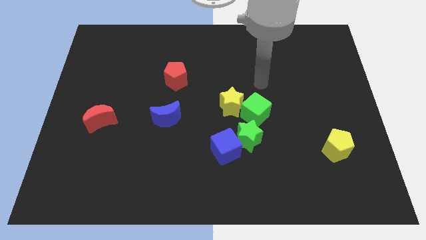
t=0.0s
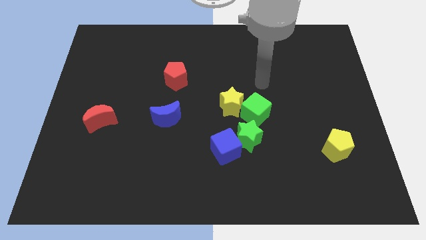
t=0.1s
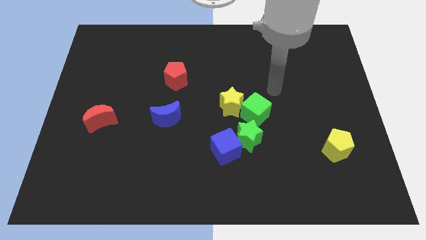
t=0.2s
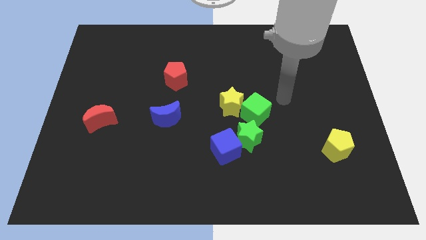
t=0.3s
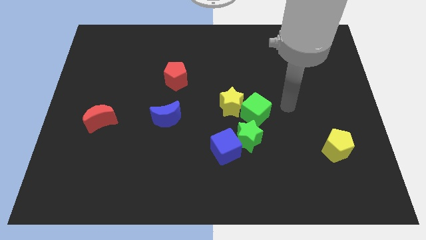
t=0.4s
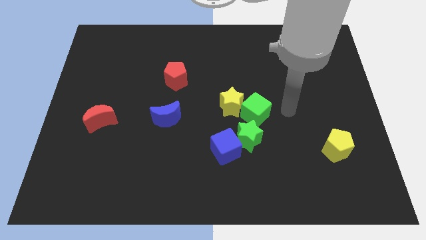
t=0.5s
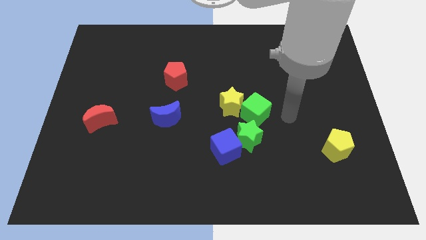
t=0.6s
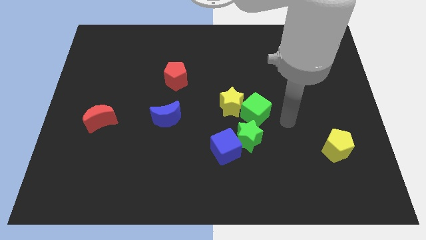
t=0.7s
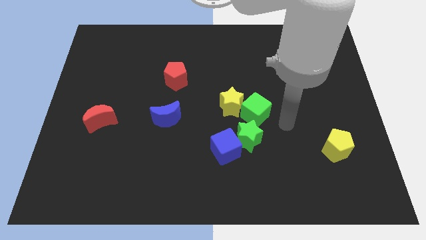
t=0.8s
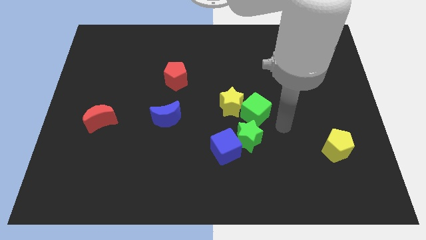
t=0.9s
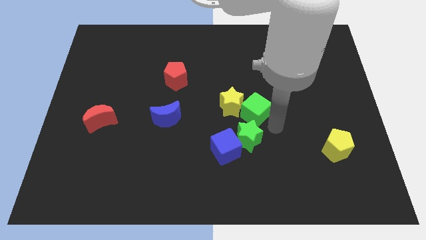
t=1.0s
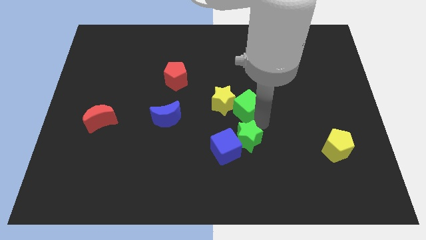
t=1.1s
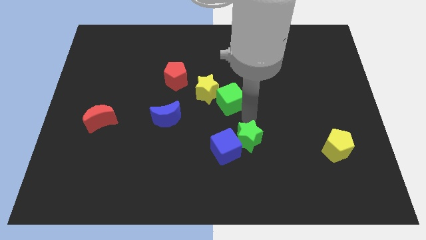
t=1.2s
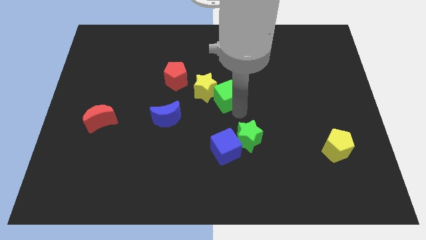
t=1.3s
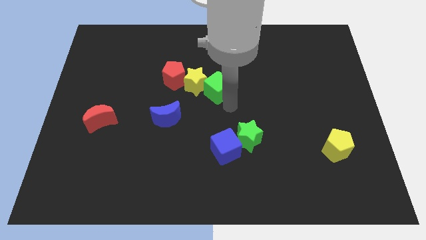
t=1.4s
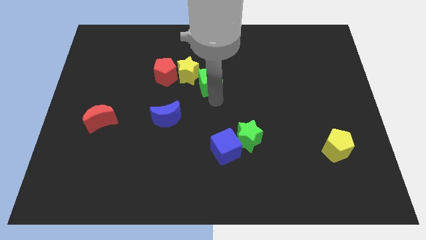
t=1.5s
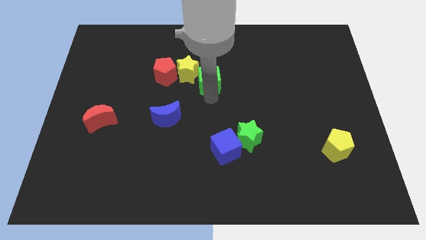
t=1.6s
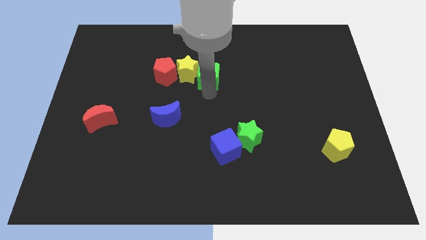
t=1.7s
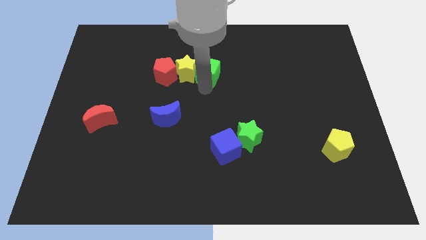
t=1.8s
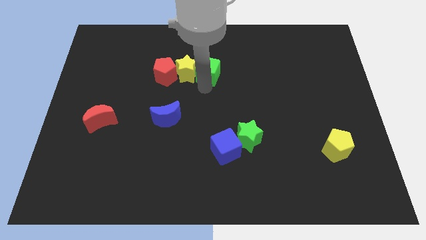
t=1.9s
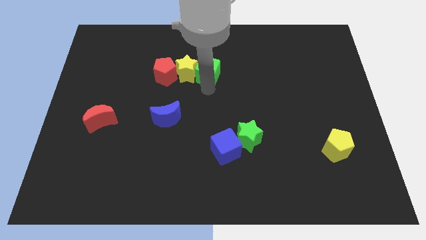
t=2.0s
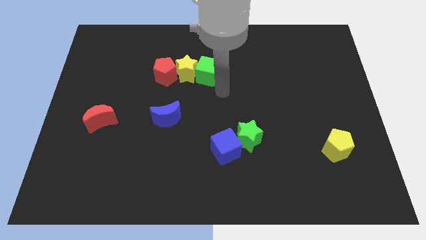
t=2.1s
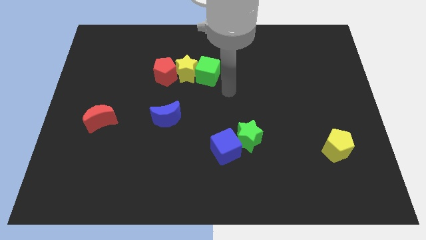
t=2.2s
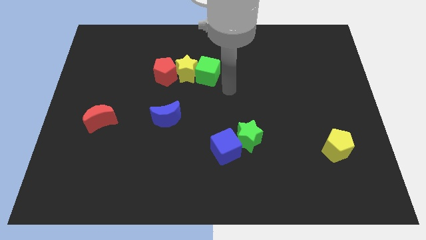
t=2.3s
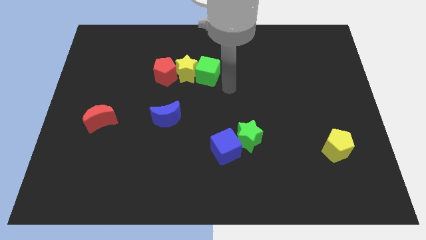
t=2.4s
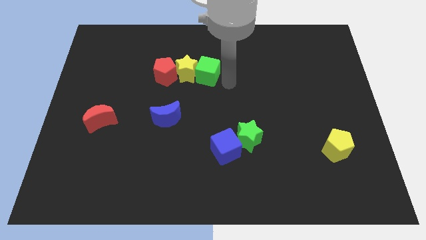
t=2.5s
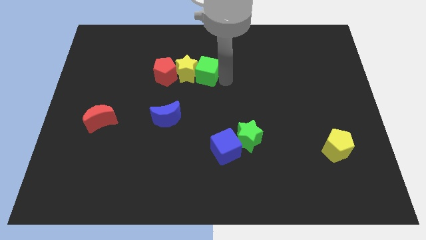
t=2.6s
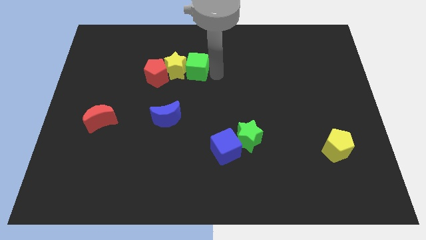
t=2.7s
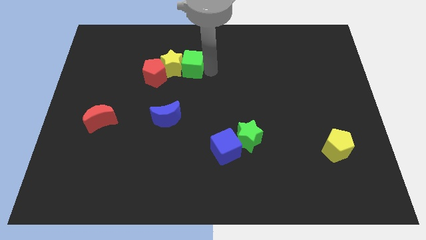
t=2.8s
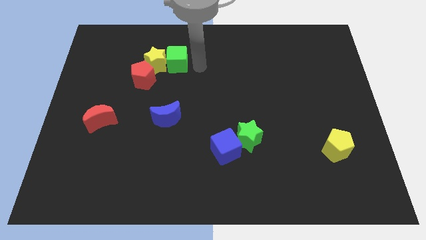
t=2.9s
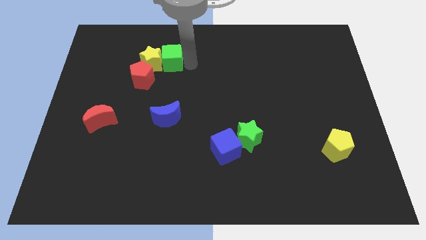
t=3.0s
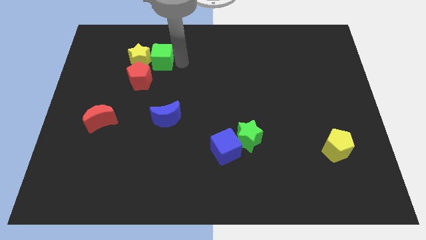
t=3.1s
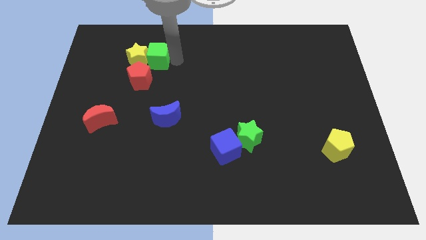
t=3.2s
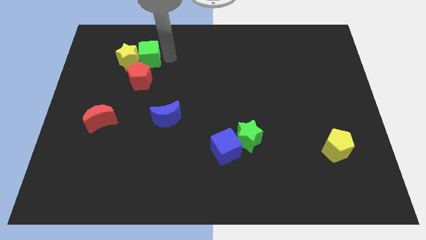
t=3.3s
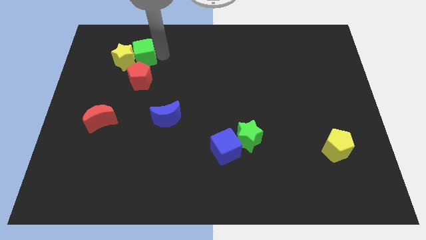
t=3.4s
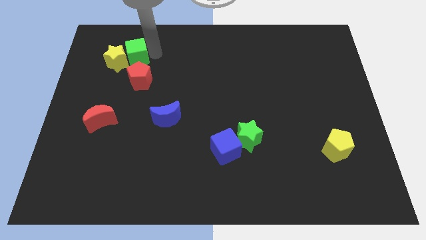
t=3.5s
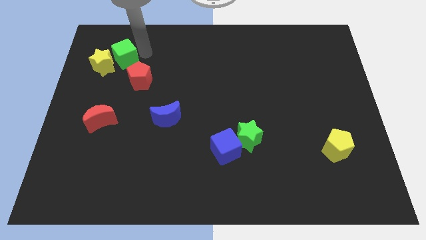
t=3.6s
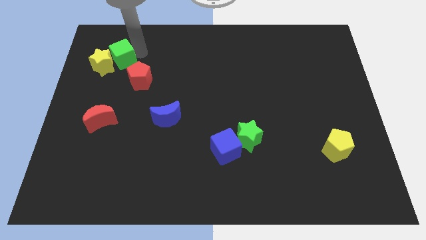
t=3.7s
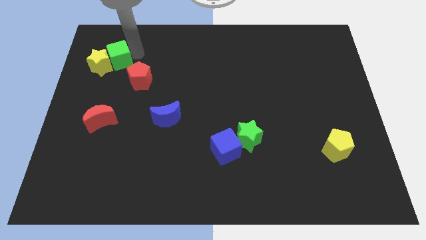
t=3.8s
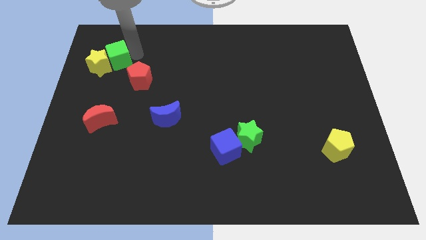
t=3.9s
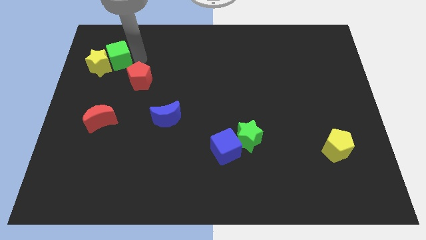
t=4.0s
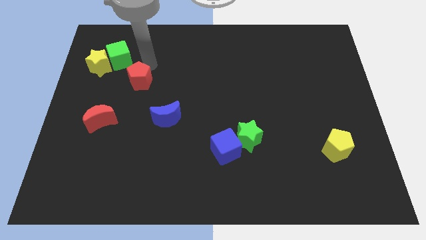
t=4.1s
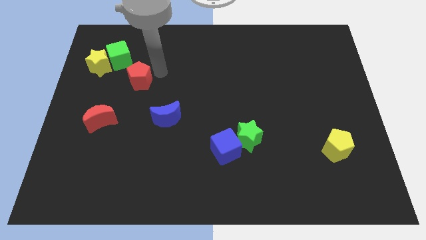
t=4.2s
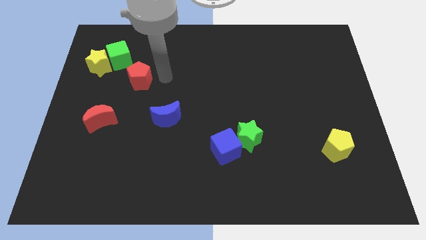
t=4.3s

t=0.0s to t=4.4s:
push the yellow star with green cube to the top left corner of the board

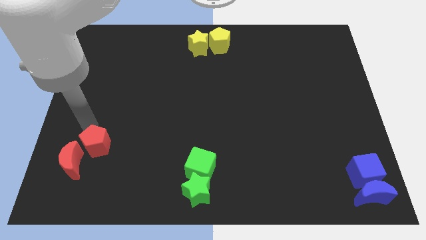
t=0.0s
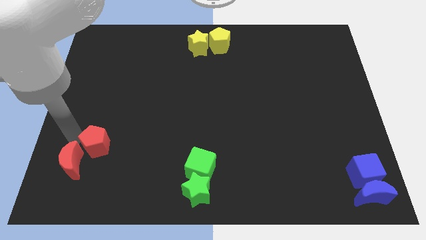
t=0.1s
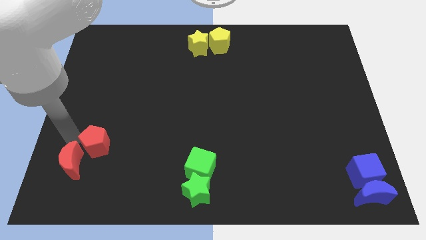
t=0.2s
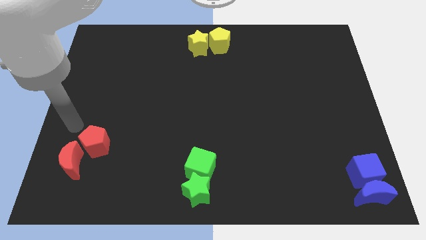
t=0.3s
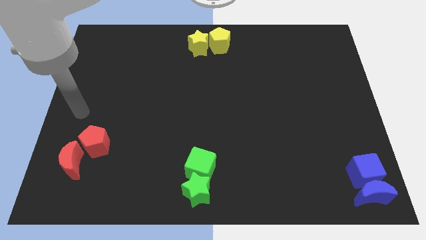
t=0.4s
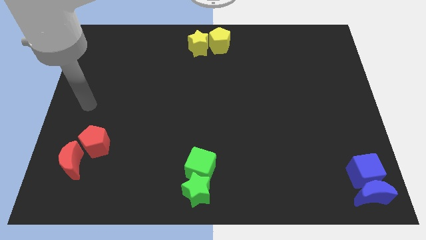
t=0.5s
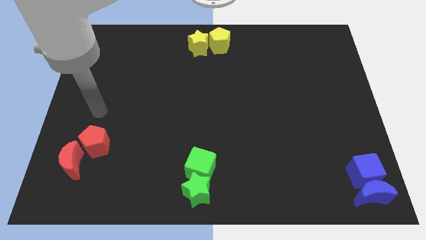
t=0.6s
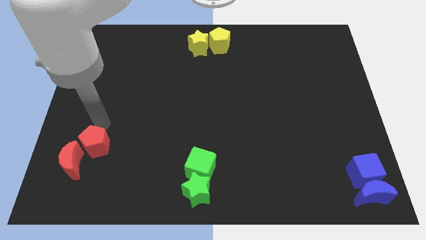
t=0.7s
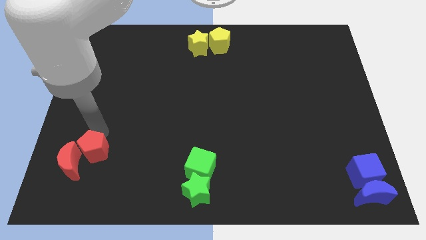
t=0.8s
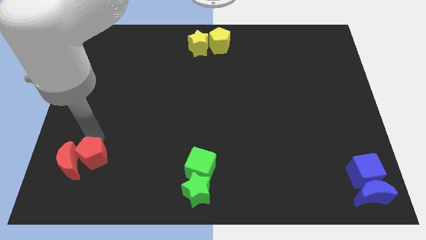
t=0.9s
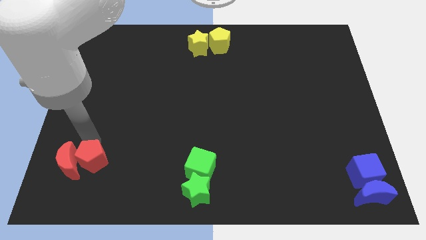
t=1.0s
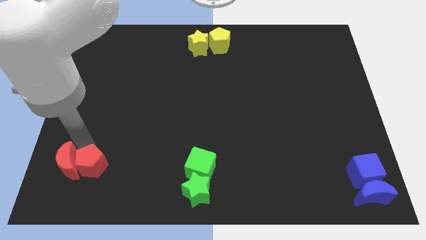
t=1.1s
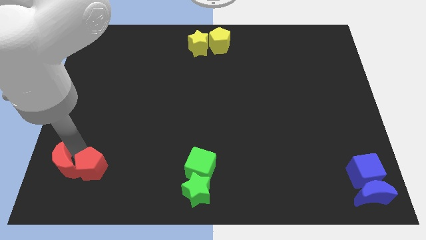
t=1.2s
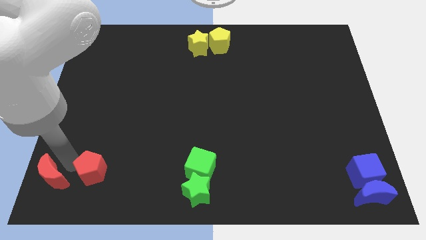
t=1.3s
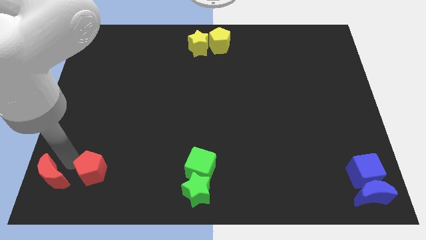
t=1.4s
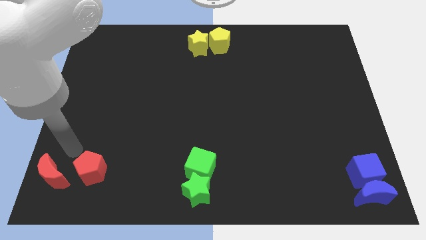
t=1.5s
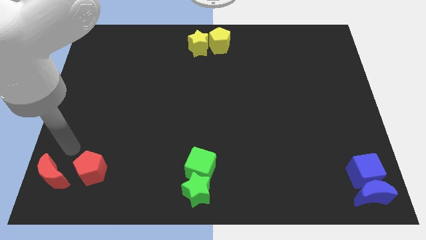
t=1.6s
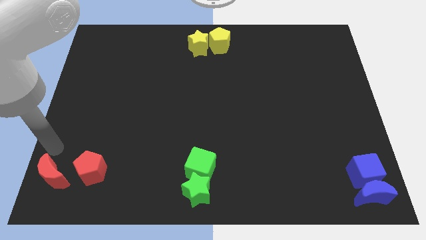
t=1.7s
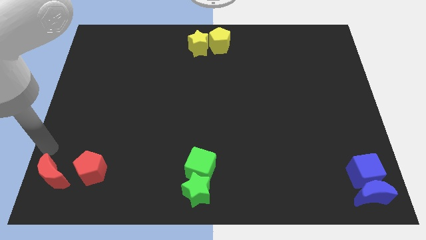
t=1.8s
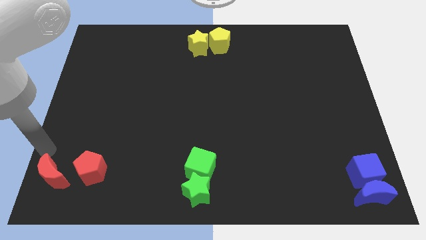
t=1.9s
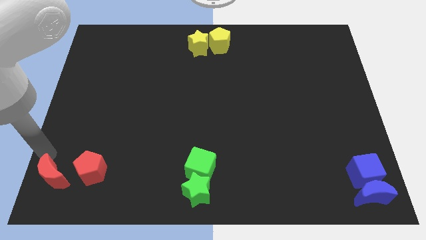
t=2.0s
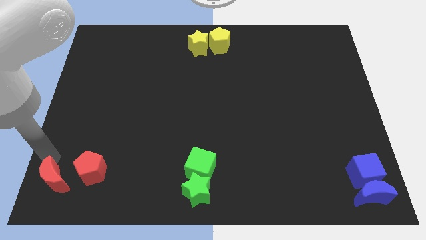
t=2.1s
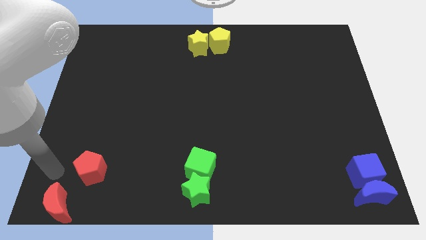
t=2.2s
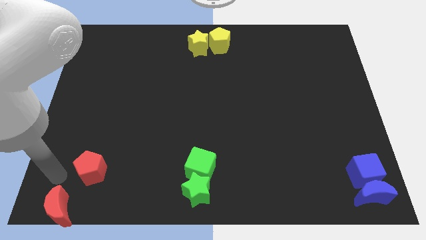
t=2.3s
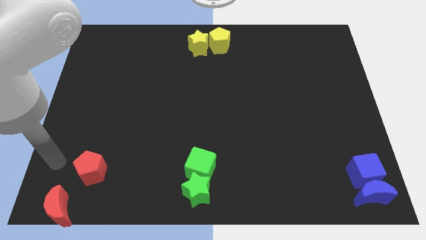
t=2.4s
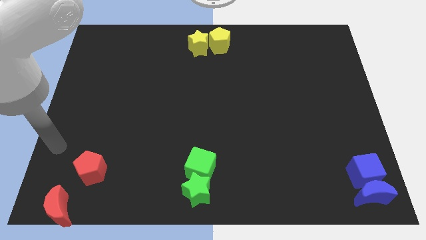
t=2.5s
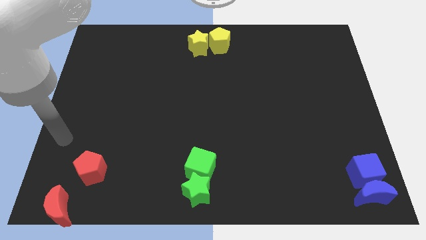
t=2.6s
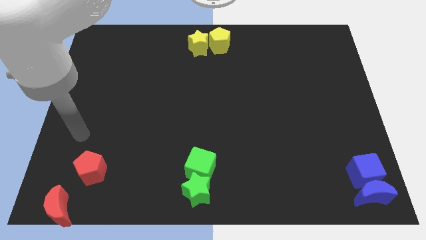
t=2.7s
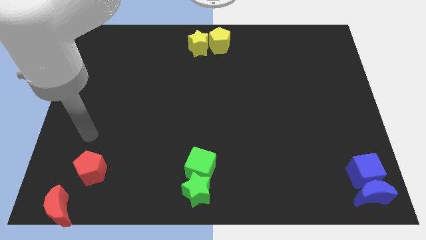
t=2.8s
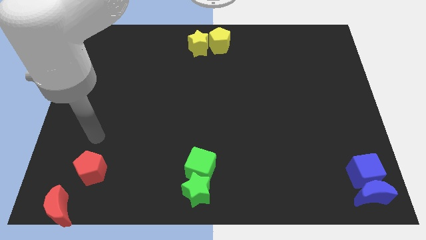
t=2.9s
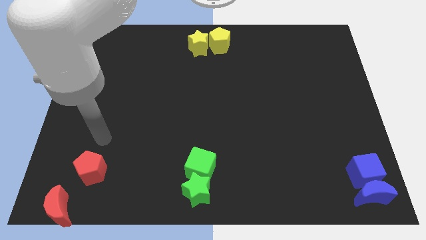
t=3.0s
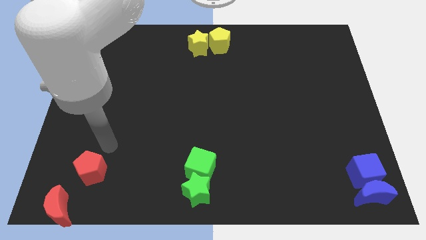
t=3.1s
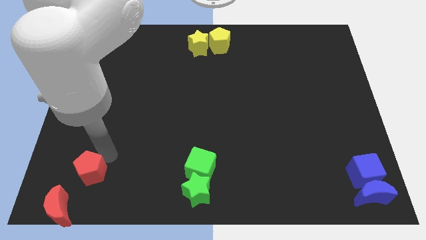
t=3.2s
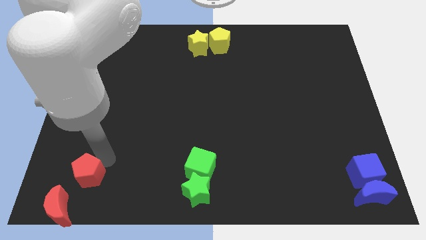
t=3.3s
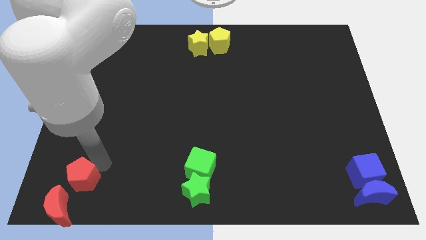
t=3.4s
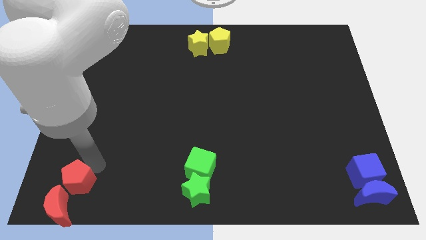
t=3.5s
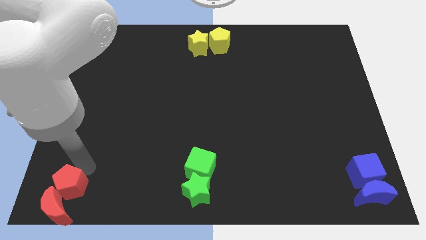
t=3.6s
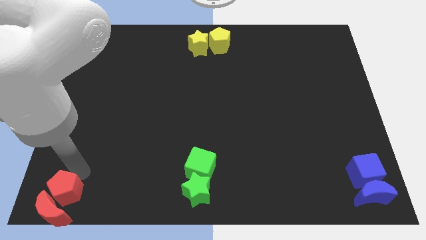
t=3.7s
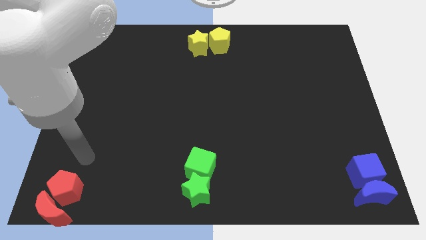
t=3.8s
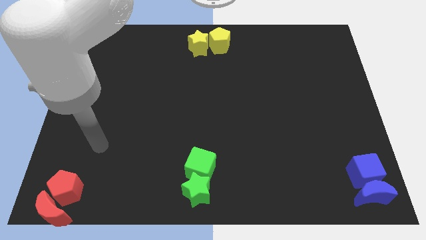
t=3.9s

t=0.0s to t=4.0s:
push the red pentagon along with the red crescent to the bottom left

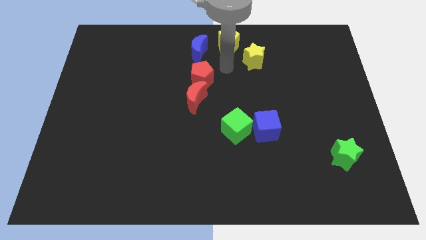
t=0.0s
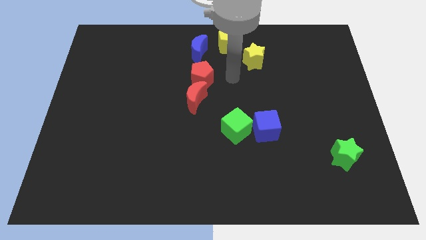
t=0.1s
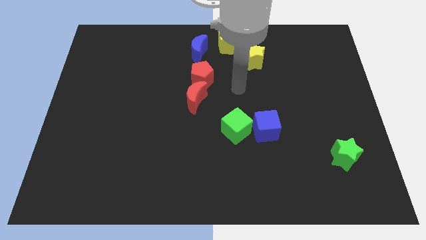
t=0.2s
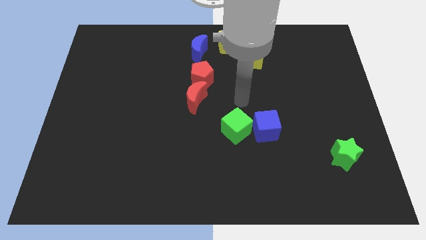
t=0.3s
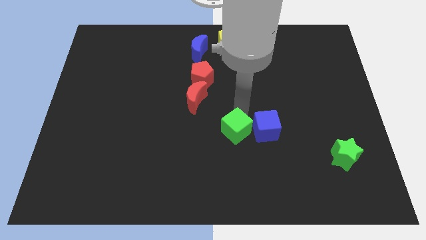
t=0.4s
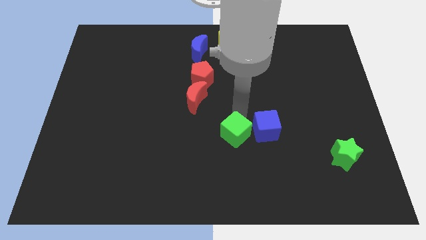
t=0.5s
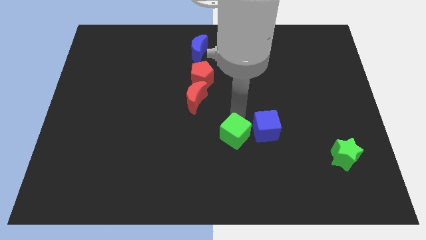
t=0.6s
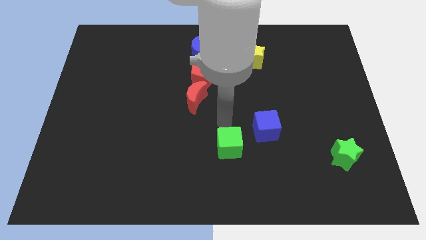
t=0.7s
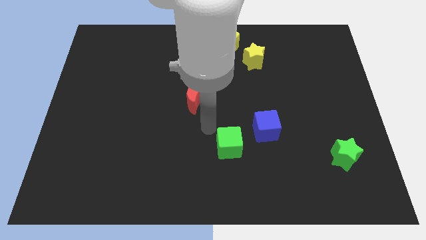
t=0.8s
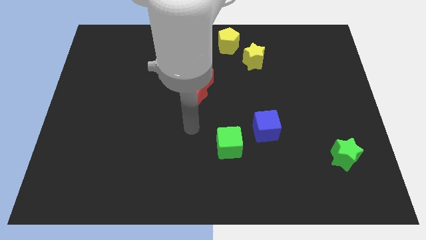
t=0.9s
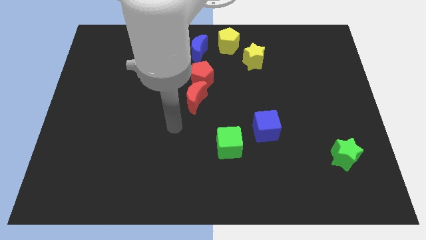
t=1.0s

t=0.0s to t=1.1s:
push the green cube away from the blue cube
